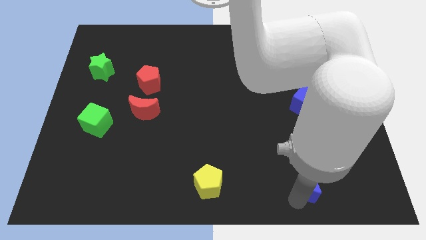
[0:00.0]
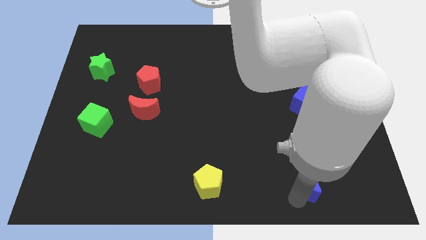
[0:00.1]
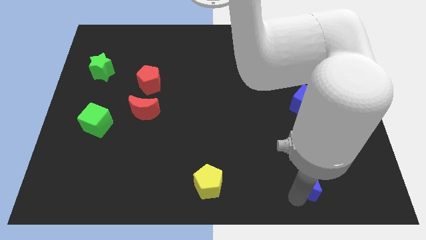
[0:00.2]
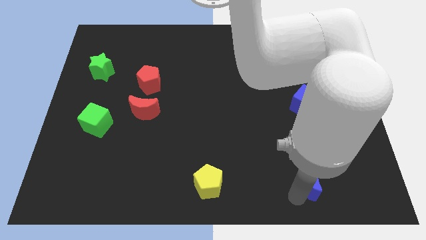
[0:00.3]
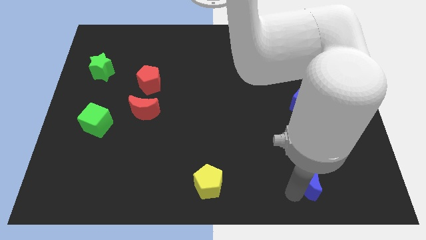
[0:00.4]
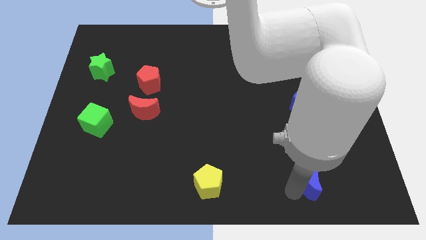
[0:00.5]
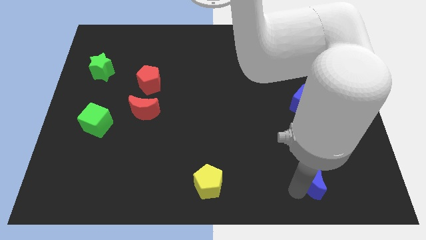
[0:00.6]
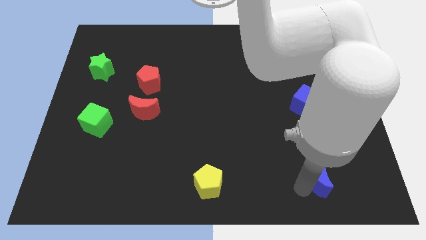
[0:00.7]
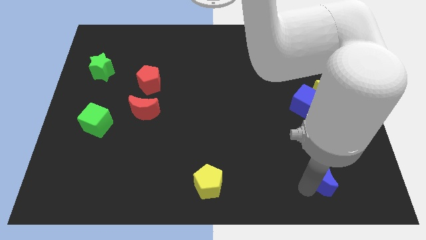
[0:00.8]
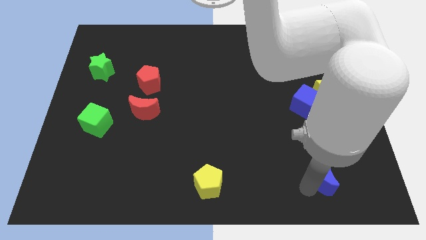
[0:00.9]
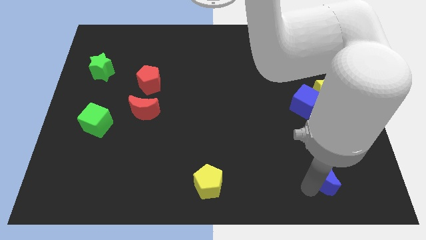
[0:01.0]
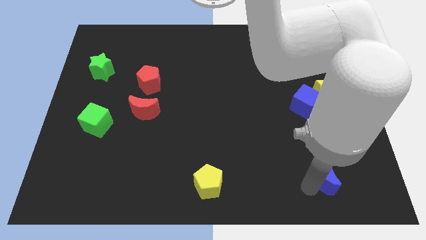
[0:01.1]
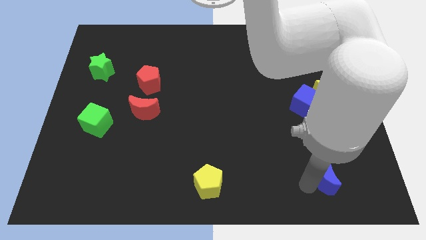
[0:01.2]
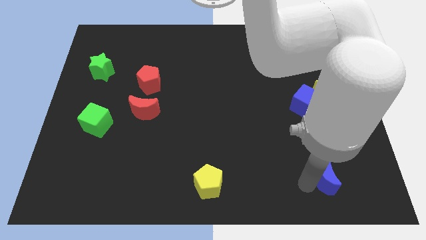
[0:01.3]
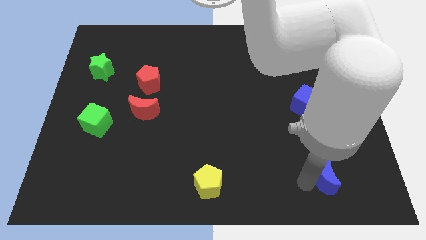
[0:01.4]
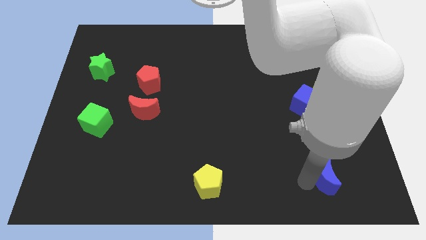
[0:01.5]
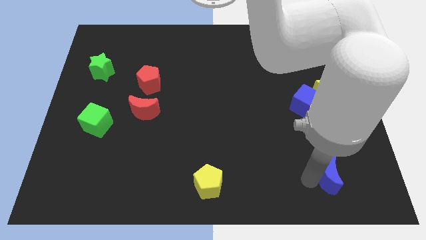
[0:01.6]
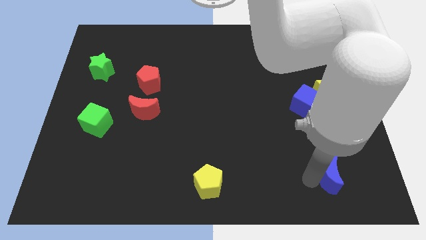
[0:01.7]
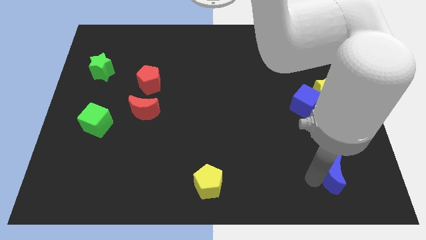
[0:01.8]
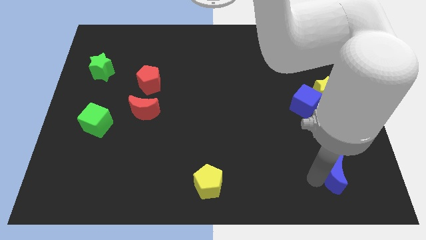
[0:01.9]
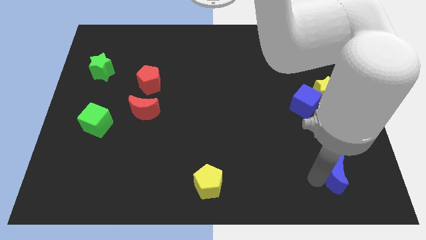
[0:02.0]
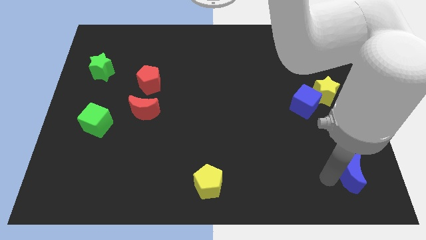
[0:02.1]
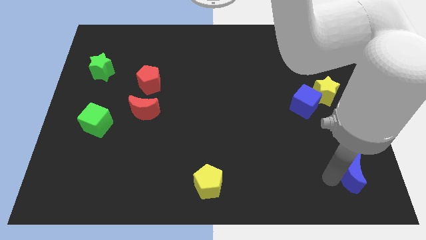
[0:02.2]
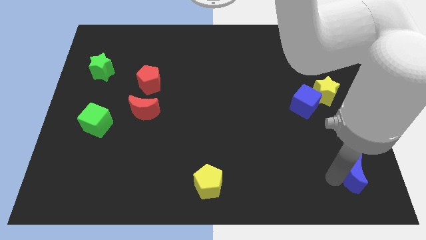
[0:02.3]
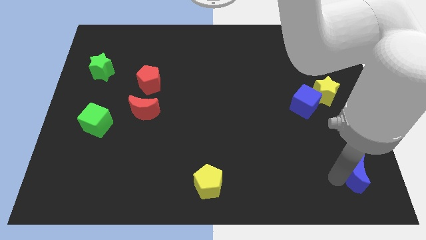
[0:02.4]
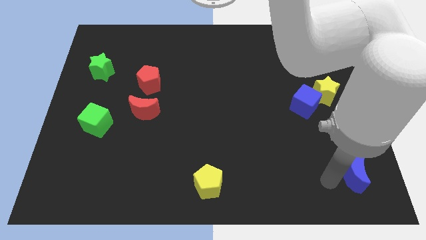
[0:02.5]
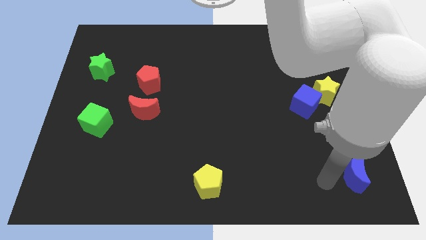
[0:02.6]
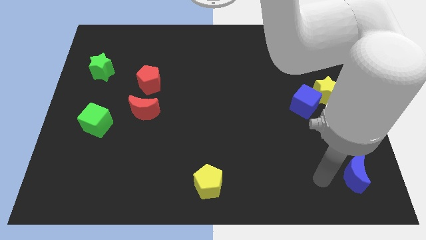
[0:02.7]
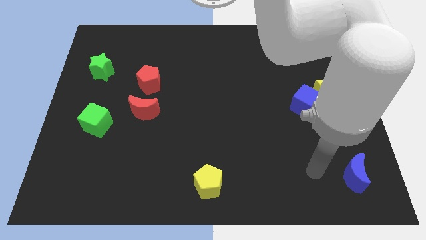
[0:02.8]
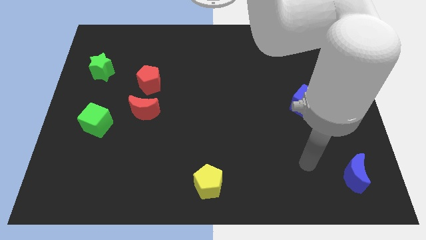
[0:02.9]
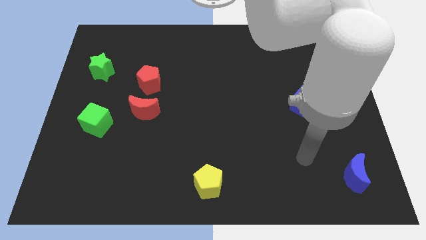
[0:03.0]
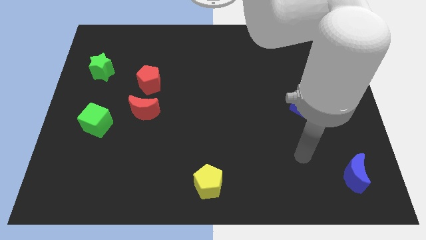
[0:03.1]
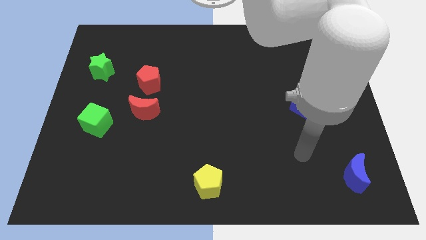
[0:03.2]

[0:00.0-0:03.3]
place blue moon vertical to yellow star

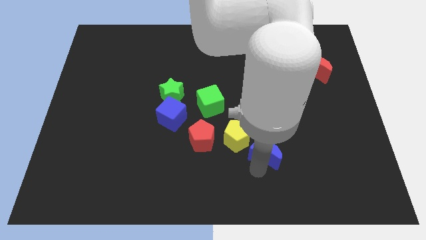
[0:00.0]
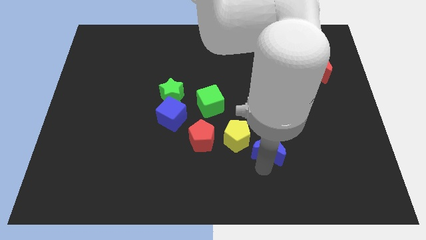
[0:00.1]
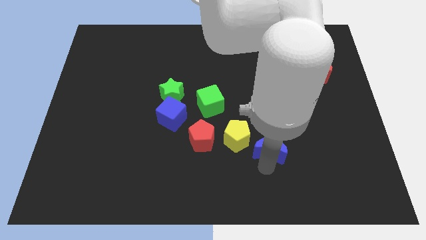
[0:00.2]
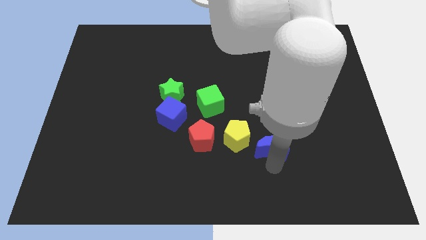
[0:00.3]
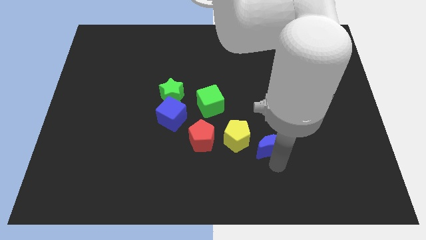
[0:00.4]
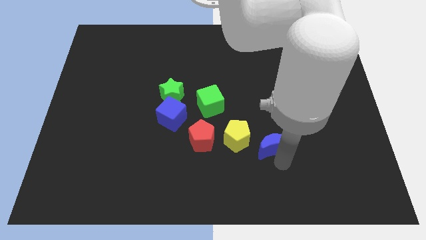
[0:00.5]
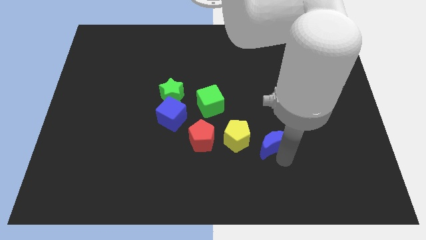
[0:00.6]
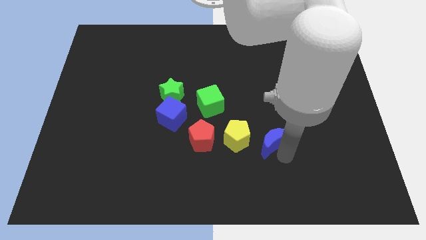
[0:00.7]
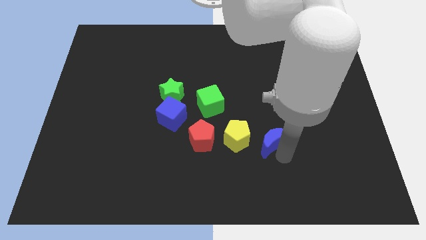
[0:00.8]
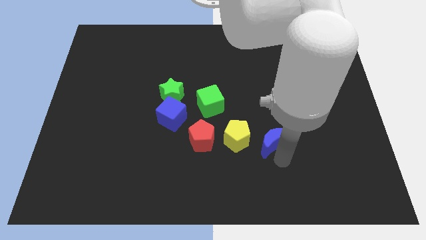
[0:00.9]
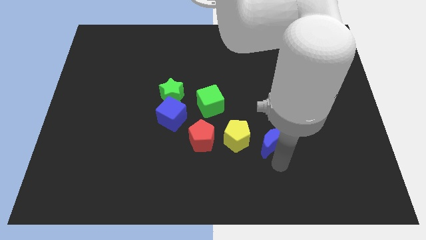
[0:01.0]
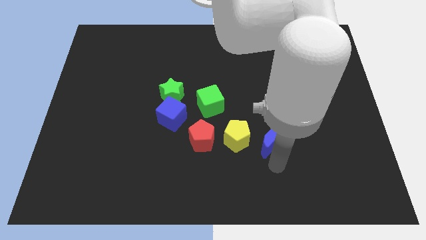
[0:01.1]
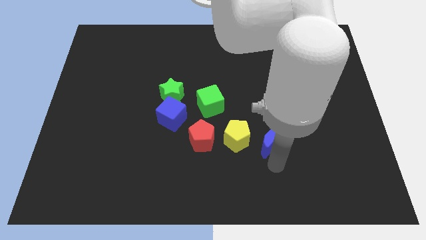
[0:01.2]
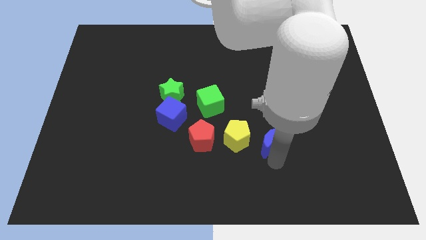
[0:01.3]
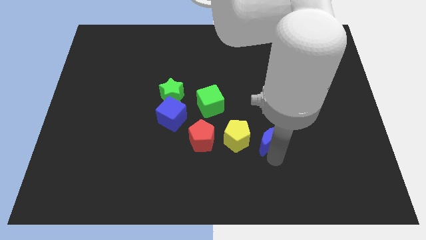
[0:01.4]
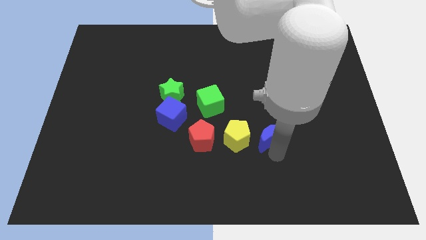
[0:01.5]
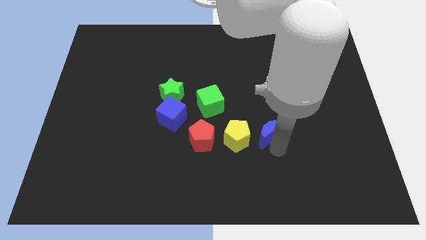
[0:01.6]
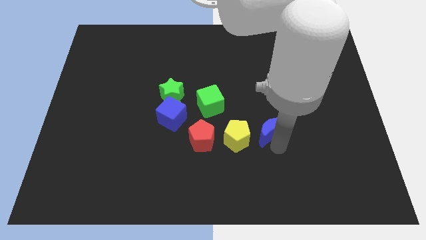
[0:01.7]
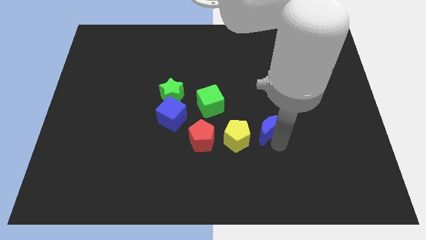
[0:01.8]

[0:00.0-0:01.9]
move the blue moon to the right of the yellow pentagon

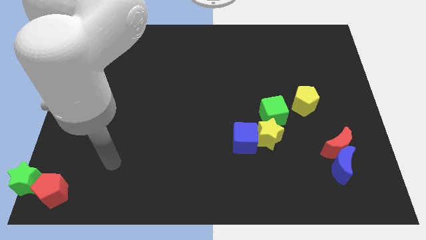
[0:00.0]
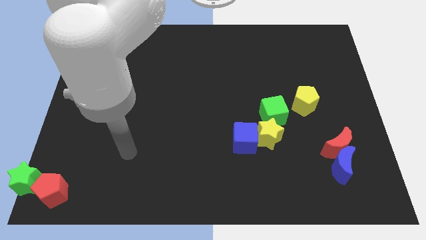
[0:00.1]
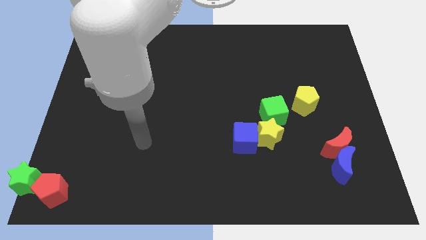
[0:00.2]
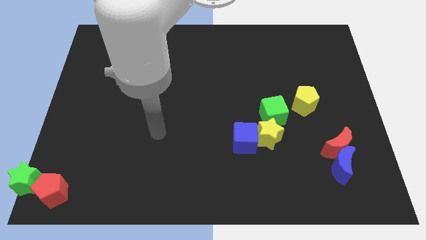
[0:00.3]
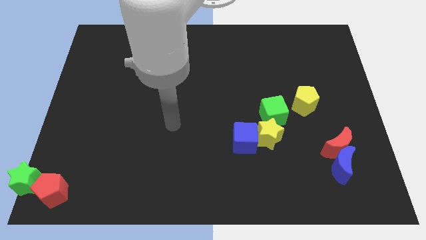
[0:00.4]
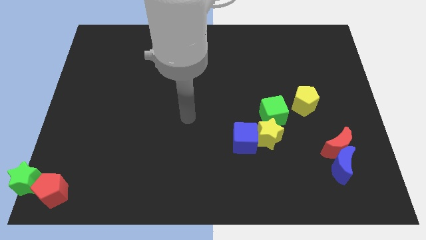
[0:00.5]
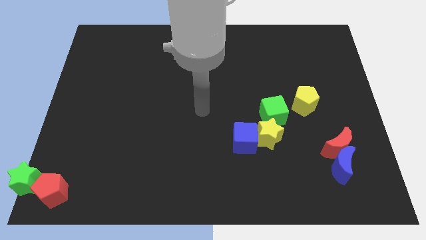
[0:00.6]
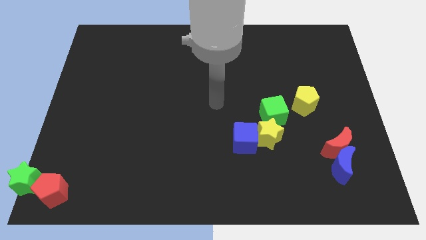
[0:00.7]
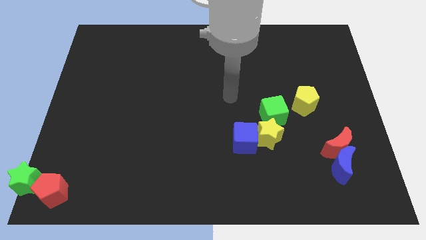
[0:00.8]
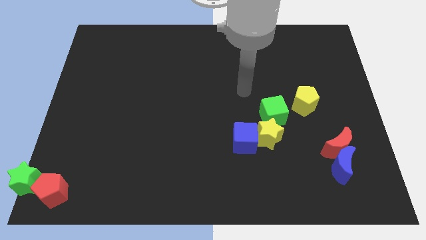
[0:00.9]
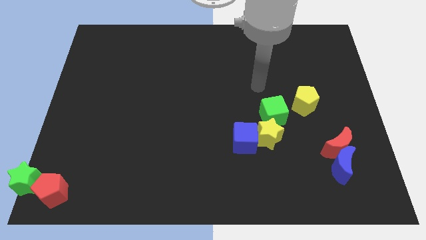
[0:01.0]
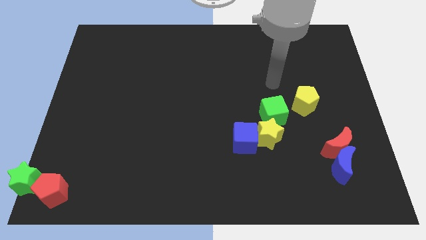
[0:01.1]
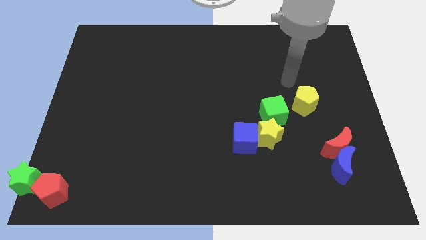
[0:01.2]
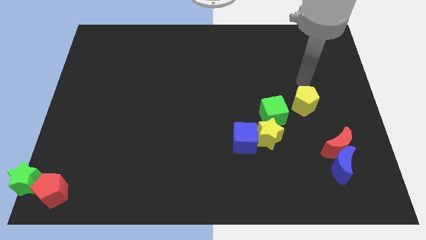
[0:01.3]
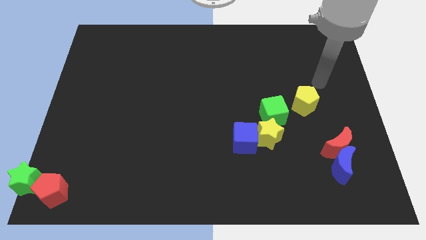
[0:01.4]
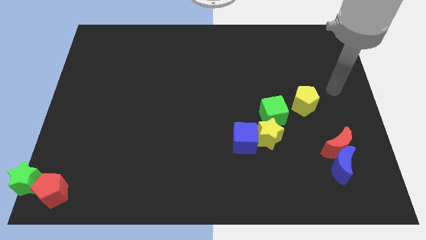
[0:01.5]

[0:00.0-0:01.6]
put the arm away from the red pentagon

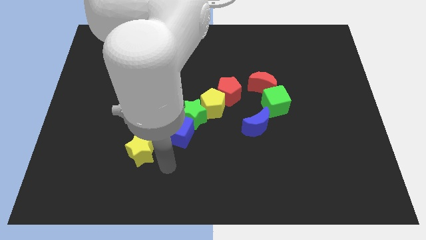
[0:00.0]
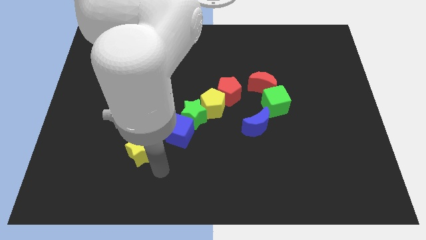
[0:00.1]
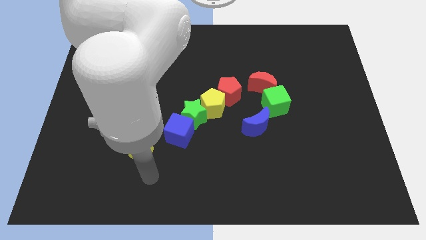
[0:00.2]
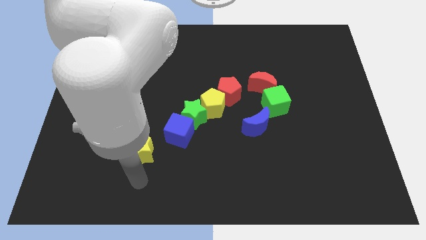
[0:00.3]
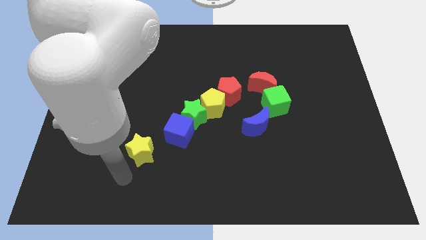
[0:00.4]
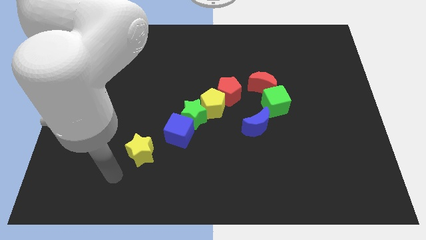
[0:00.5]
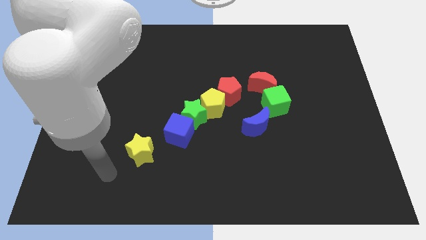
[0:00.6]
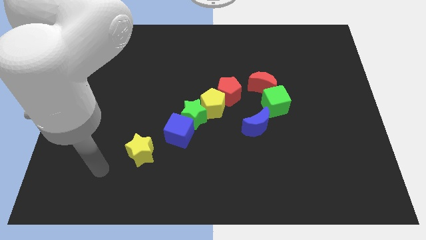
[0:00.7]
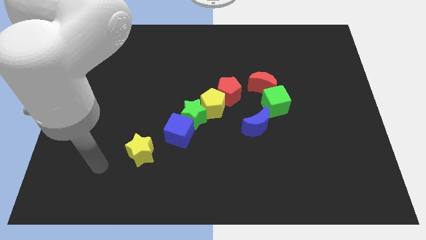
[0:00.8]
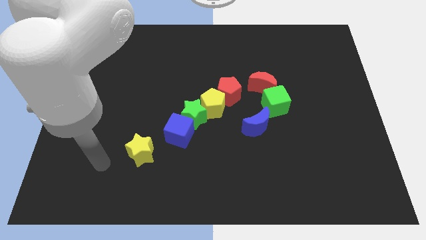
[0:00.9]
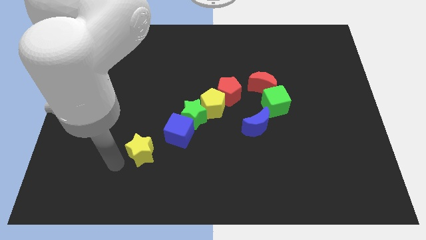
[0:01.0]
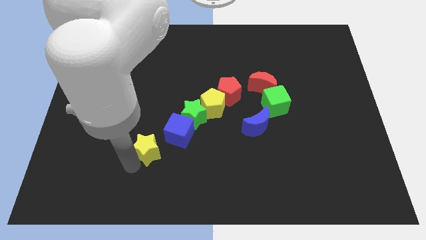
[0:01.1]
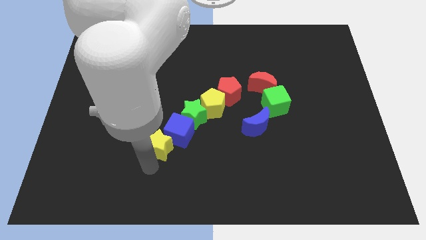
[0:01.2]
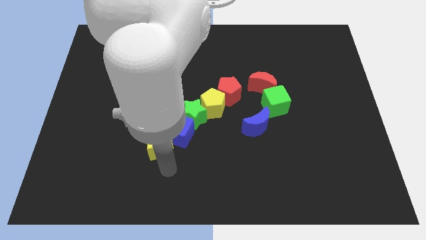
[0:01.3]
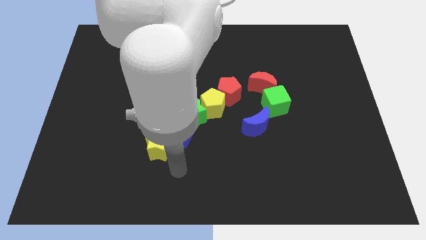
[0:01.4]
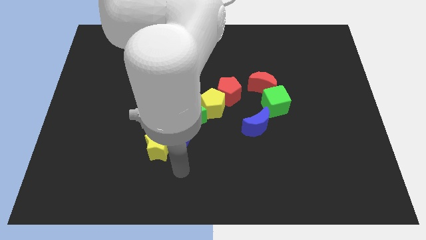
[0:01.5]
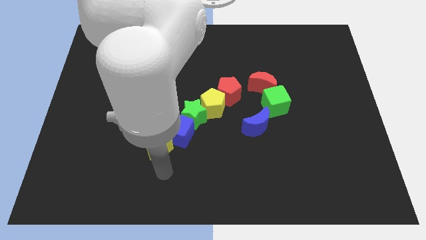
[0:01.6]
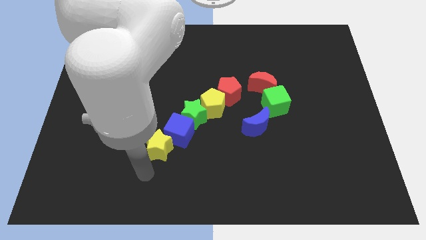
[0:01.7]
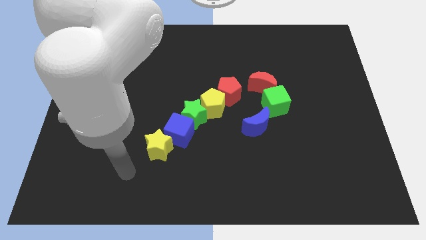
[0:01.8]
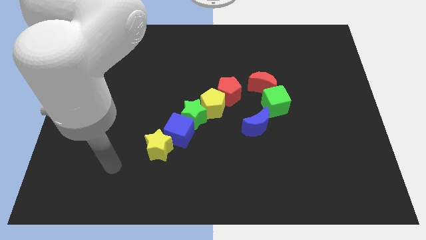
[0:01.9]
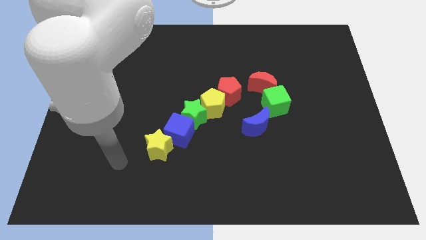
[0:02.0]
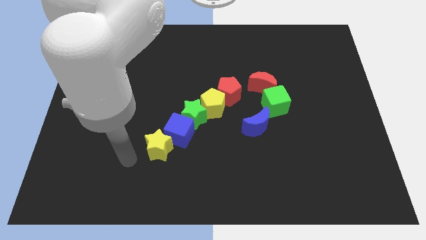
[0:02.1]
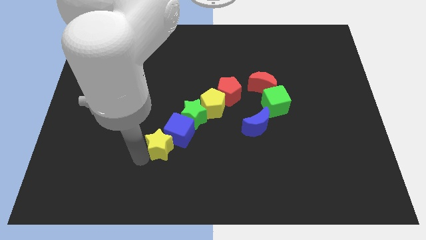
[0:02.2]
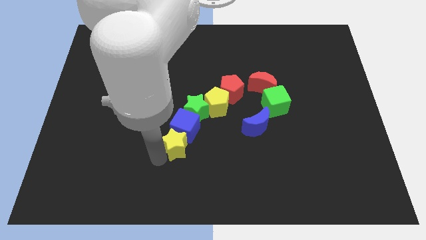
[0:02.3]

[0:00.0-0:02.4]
move the yellow star into the blue cube
